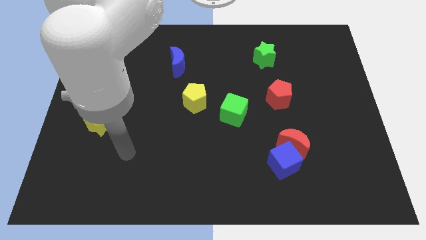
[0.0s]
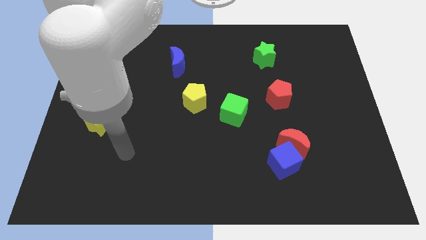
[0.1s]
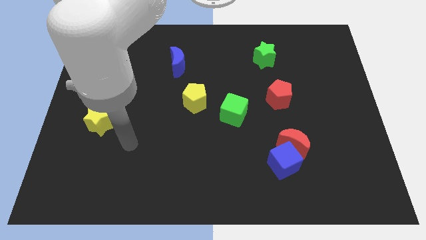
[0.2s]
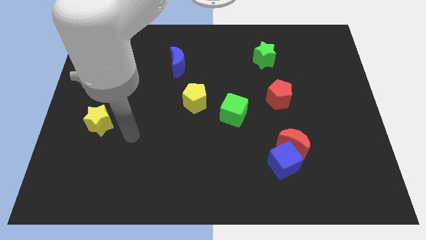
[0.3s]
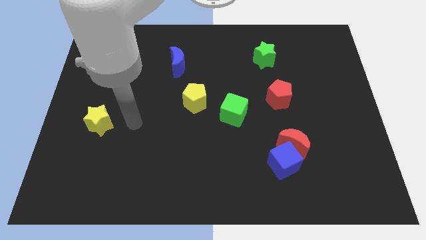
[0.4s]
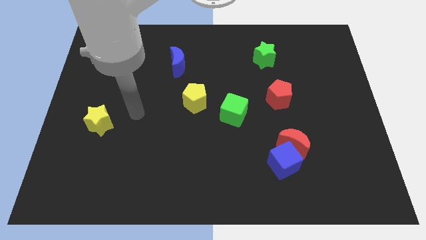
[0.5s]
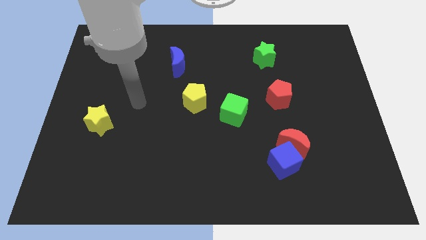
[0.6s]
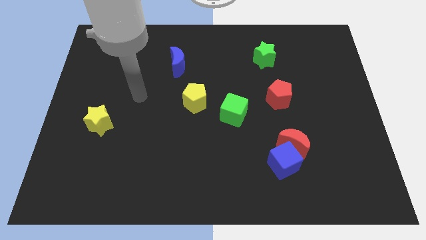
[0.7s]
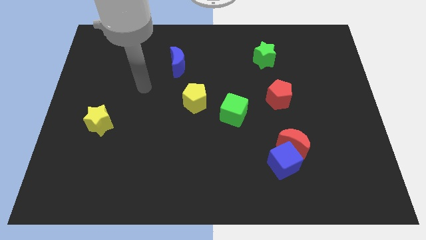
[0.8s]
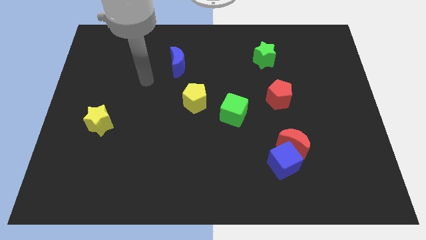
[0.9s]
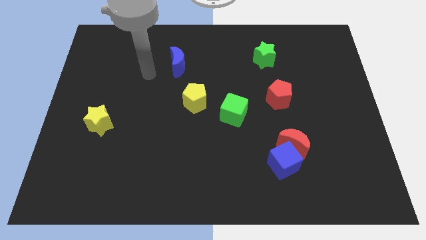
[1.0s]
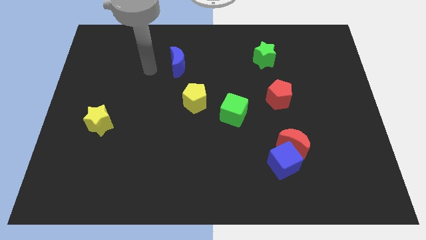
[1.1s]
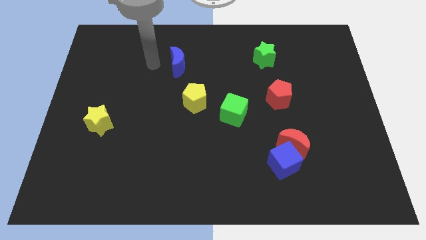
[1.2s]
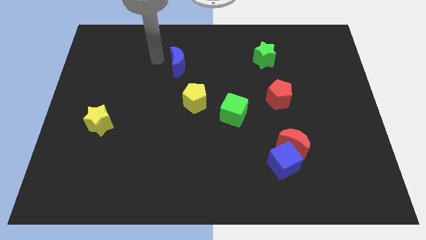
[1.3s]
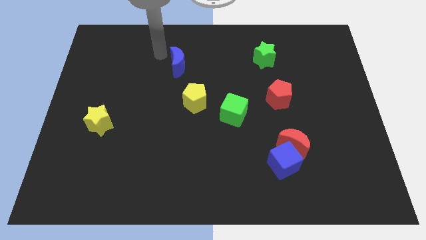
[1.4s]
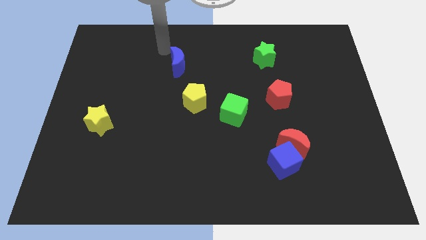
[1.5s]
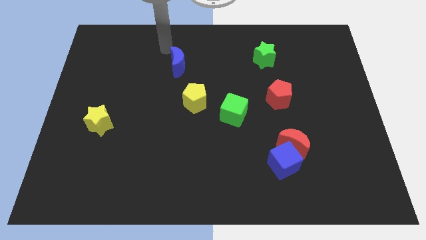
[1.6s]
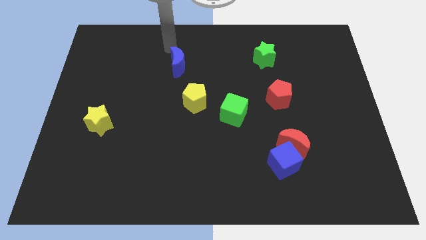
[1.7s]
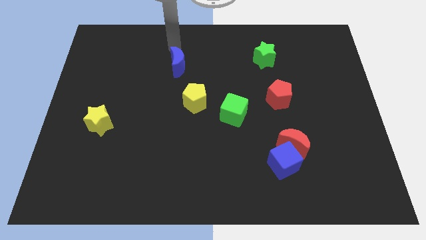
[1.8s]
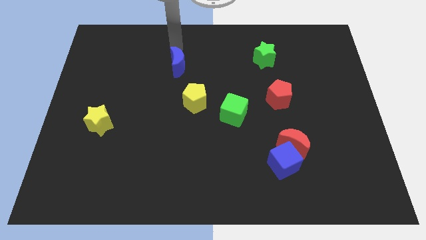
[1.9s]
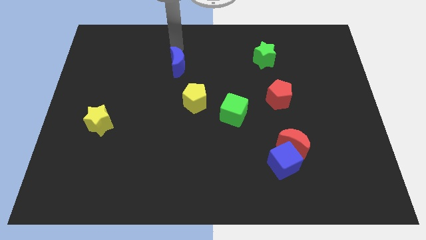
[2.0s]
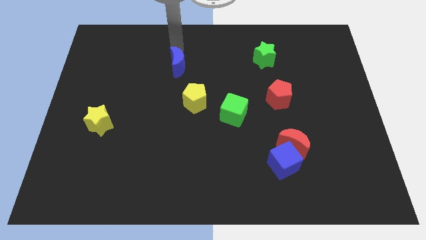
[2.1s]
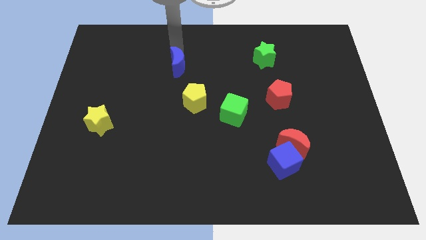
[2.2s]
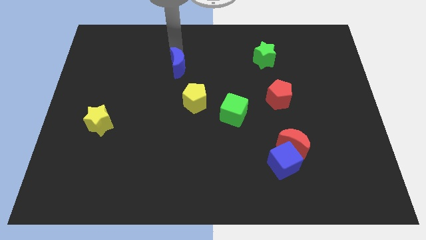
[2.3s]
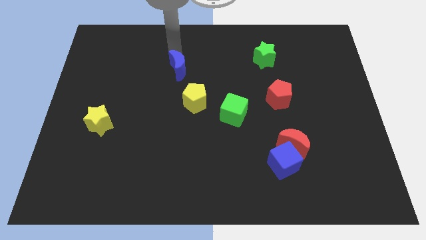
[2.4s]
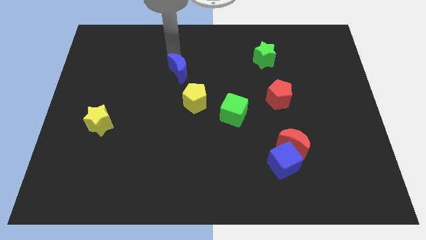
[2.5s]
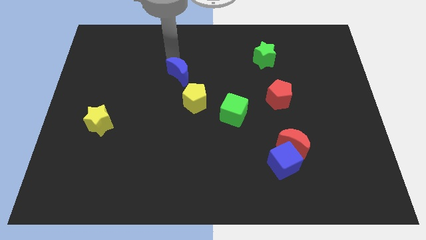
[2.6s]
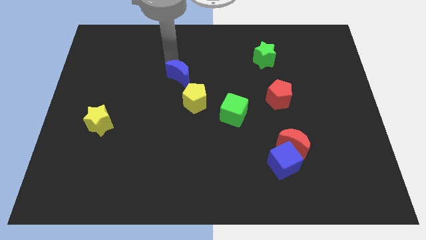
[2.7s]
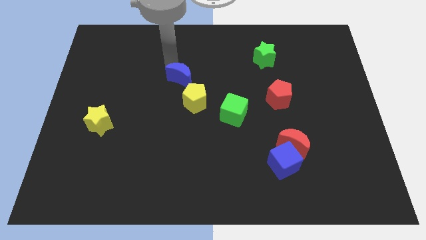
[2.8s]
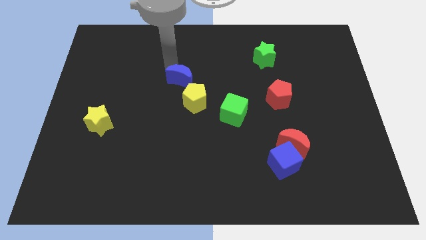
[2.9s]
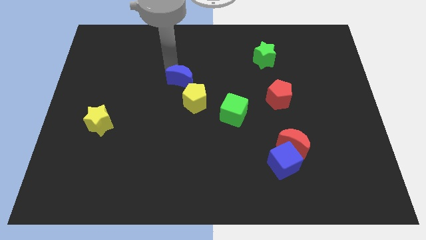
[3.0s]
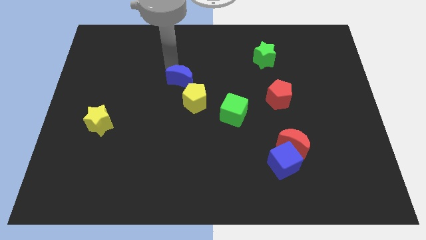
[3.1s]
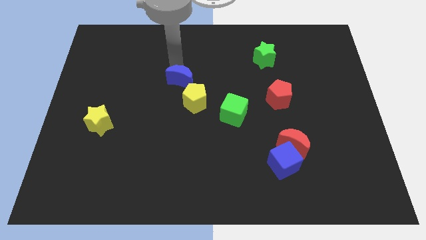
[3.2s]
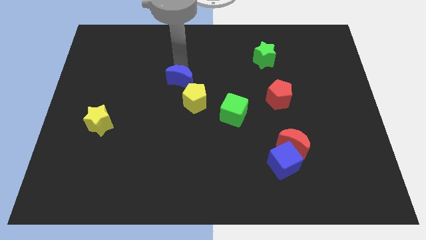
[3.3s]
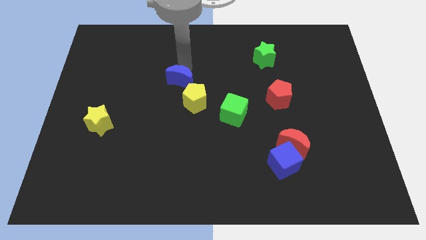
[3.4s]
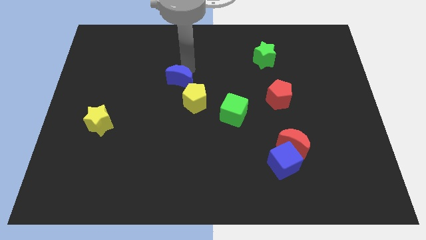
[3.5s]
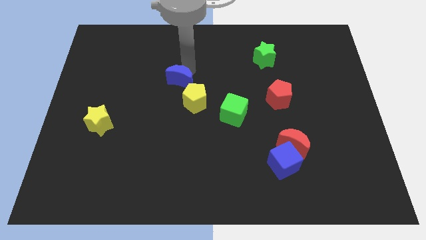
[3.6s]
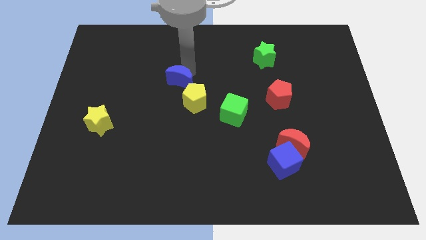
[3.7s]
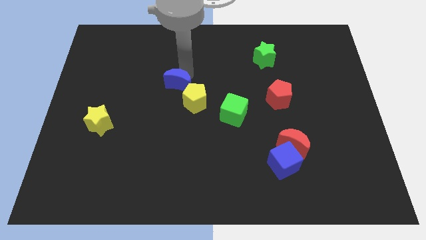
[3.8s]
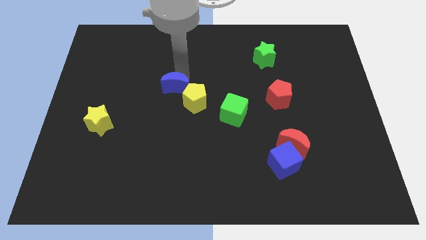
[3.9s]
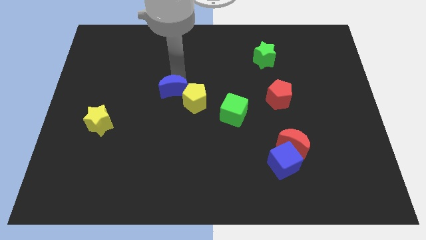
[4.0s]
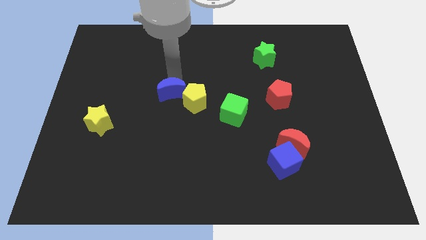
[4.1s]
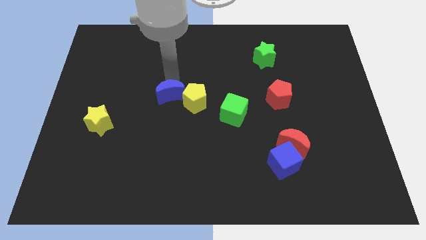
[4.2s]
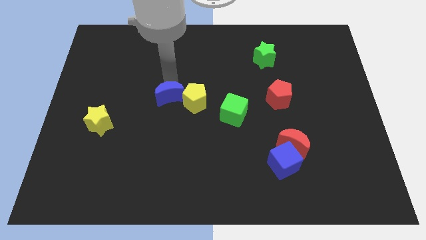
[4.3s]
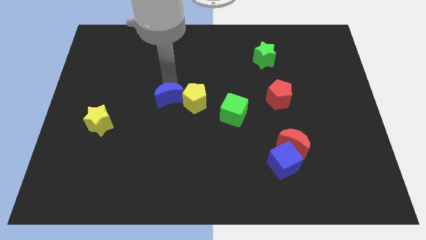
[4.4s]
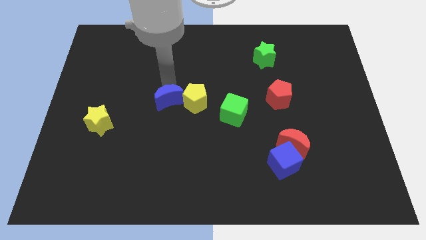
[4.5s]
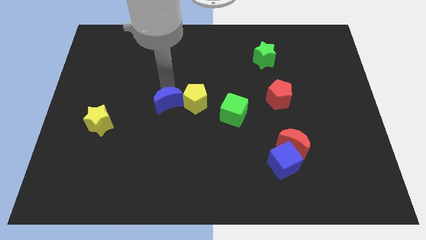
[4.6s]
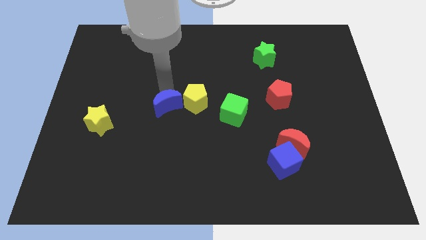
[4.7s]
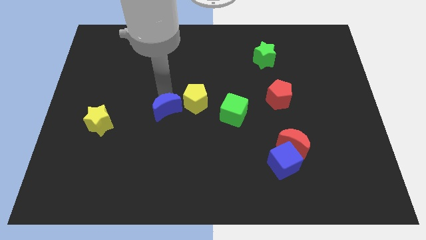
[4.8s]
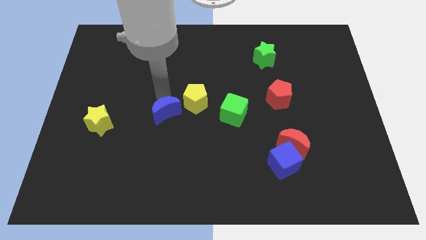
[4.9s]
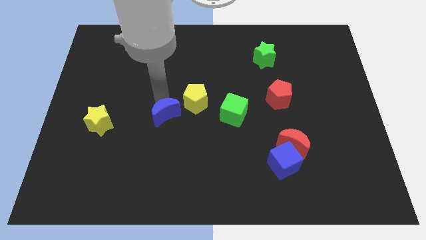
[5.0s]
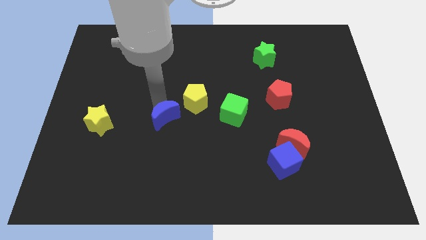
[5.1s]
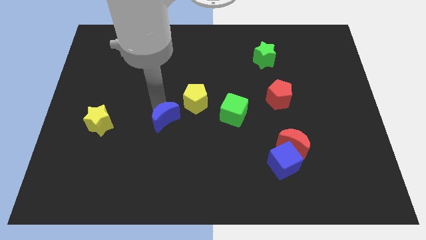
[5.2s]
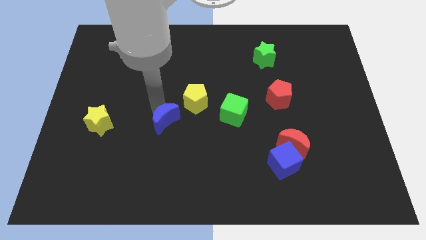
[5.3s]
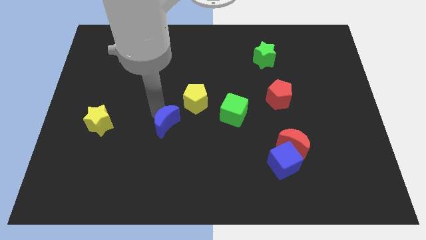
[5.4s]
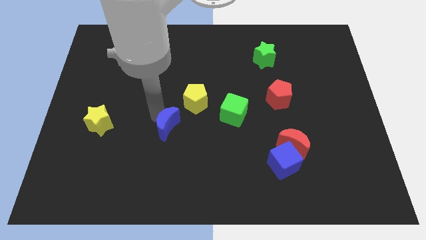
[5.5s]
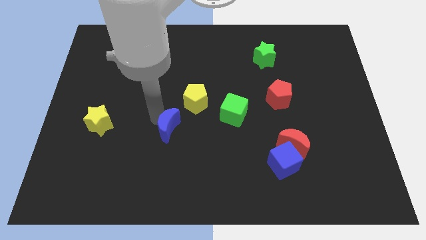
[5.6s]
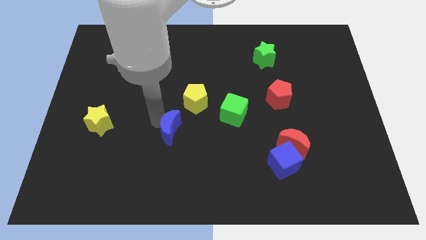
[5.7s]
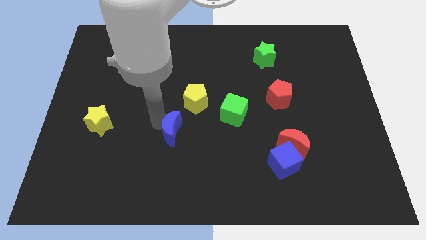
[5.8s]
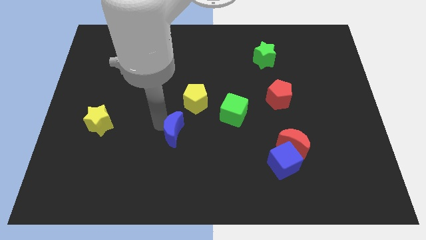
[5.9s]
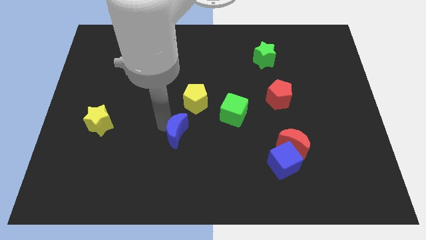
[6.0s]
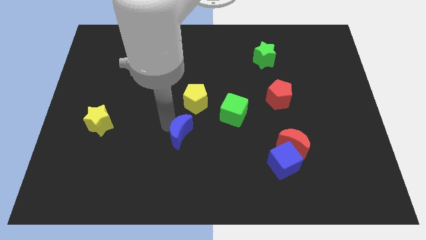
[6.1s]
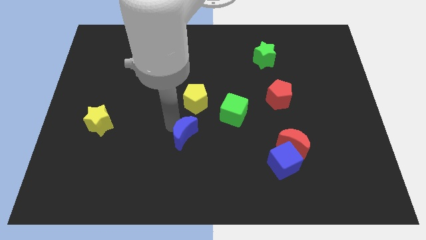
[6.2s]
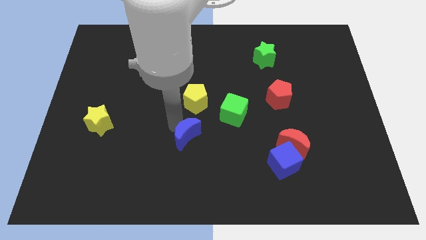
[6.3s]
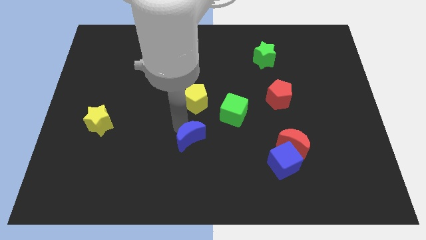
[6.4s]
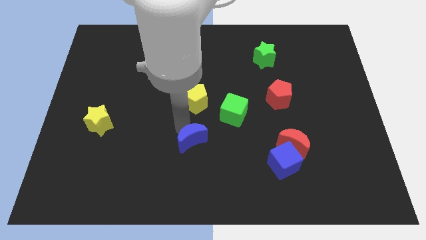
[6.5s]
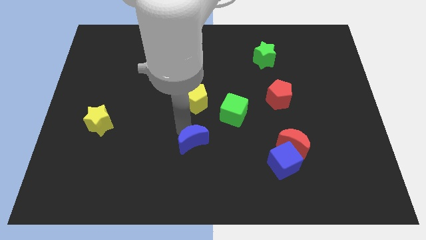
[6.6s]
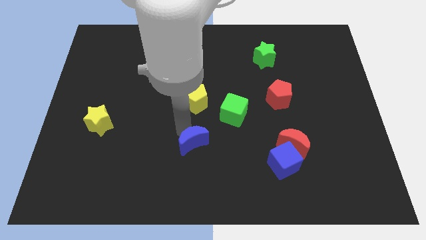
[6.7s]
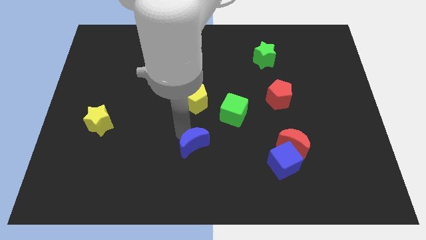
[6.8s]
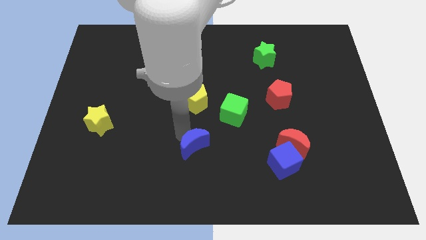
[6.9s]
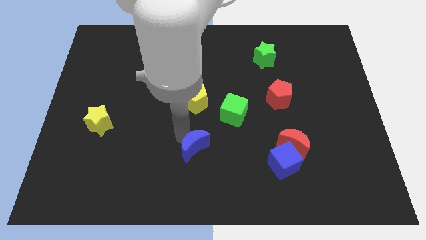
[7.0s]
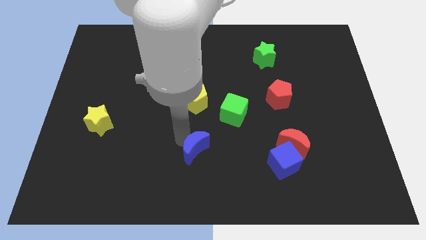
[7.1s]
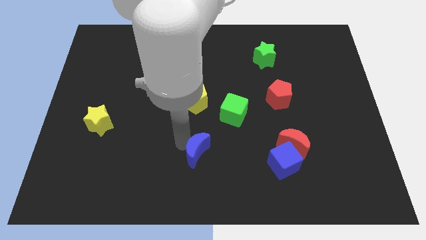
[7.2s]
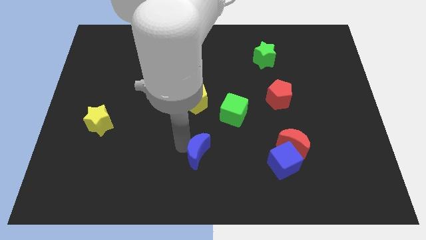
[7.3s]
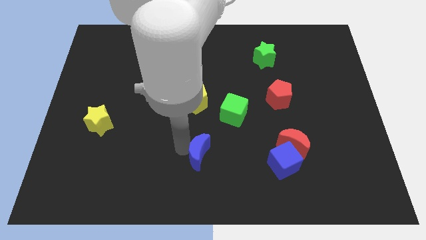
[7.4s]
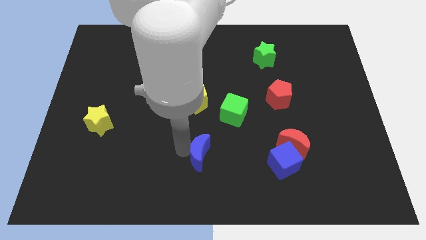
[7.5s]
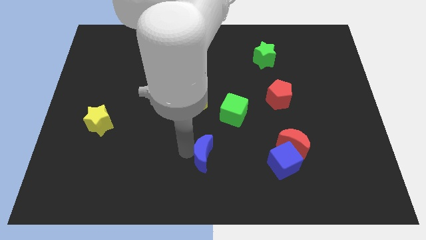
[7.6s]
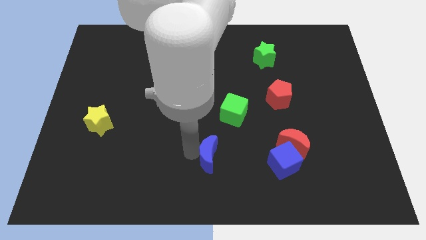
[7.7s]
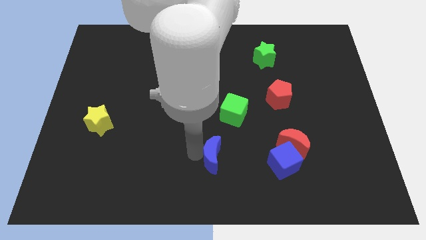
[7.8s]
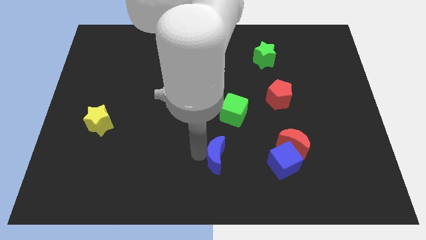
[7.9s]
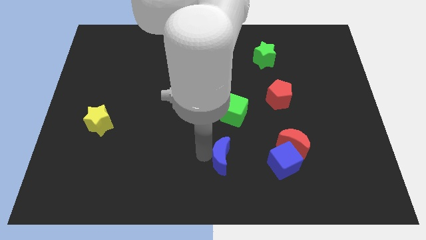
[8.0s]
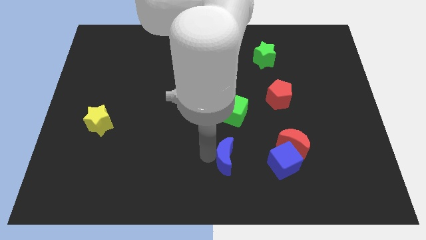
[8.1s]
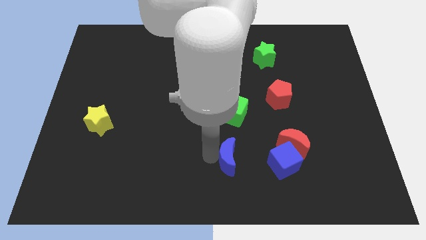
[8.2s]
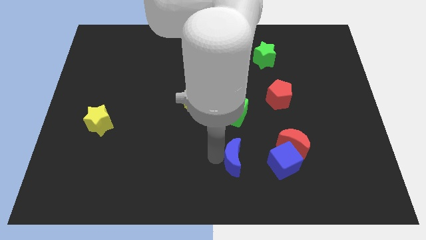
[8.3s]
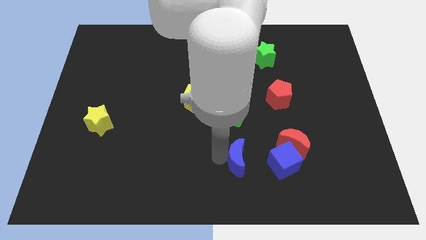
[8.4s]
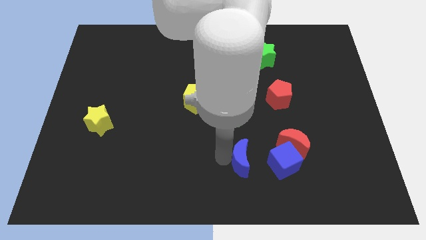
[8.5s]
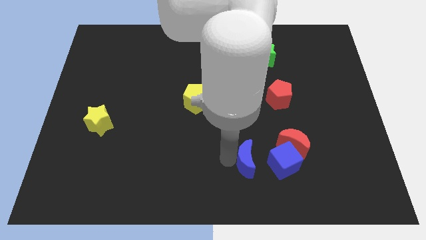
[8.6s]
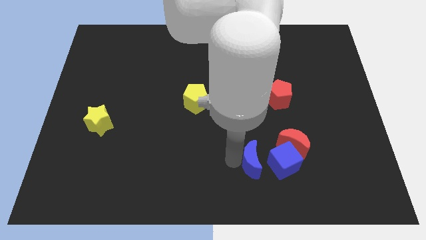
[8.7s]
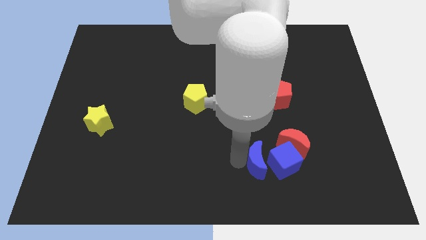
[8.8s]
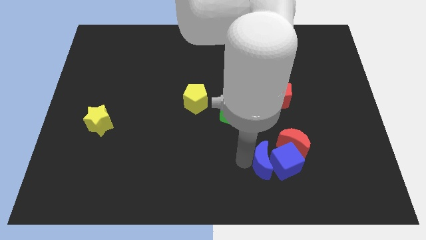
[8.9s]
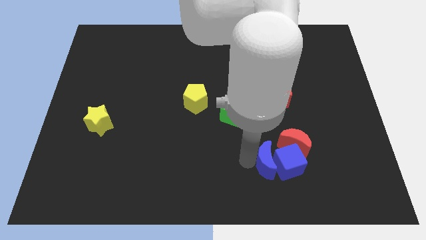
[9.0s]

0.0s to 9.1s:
push the blue moon to the blue cube
